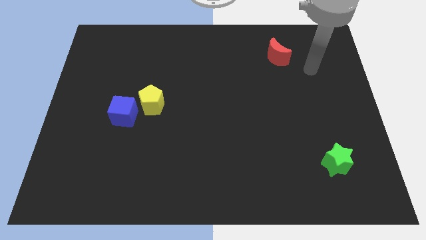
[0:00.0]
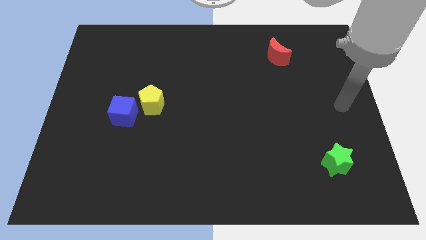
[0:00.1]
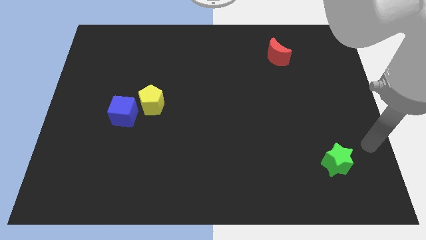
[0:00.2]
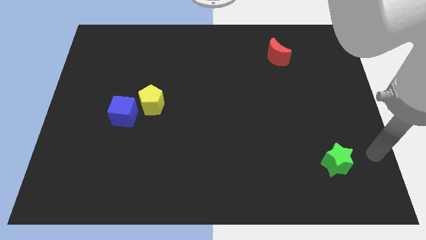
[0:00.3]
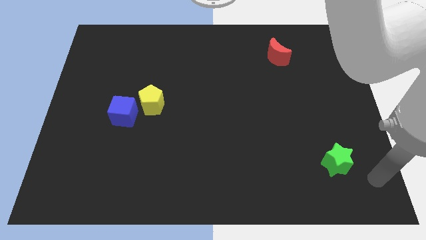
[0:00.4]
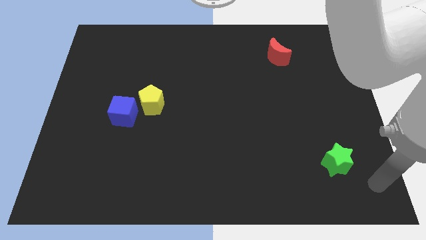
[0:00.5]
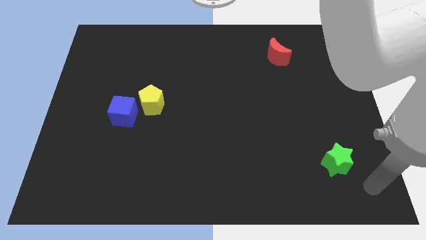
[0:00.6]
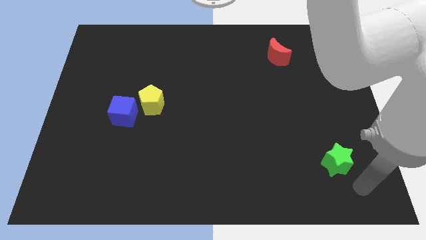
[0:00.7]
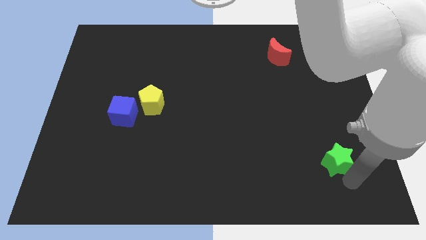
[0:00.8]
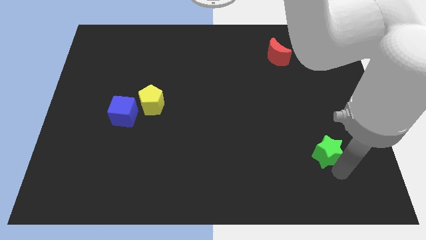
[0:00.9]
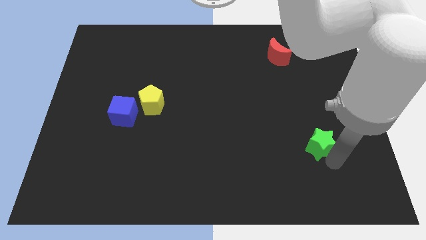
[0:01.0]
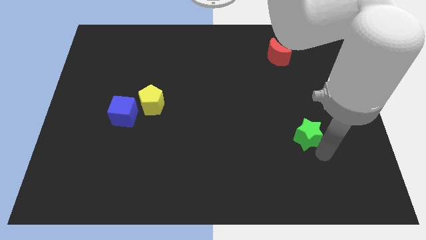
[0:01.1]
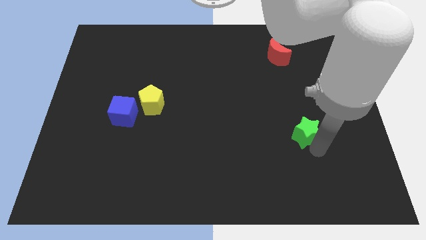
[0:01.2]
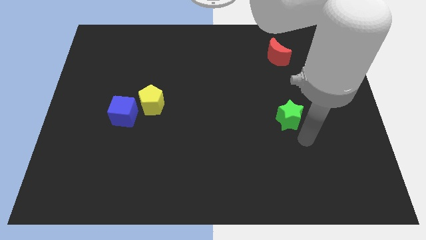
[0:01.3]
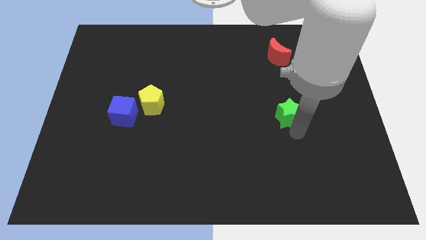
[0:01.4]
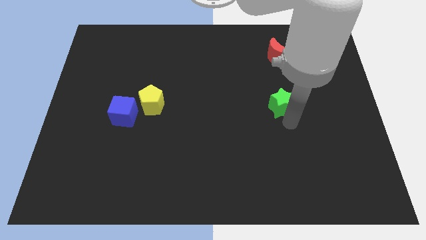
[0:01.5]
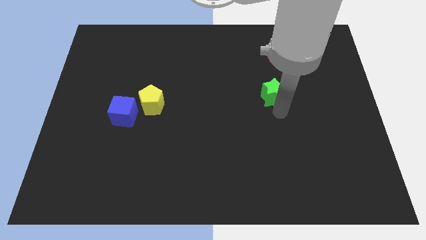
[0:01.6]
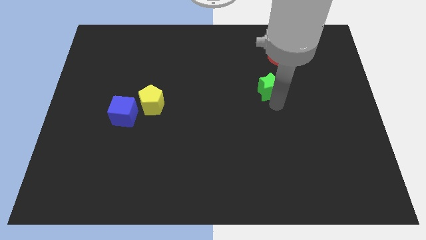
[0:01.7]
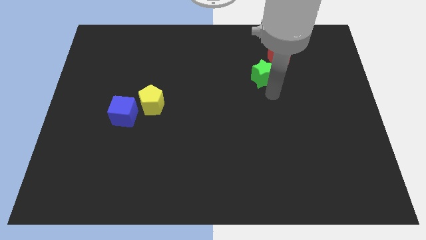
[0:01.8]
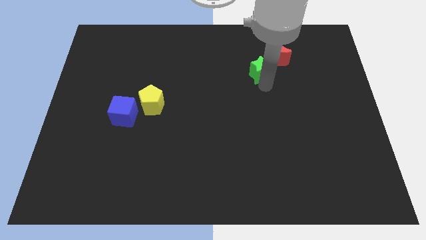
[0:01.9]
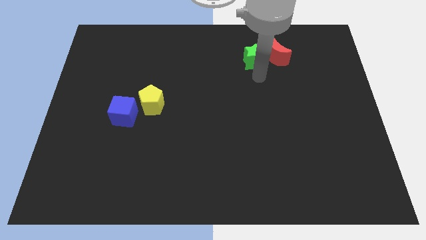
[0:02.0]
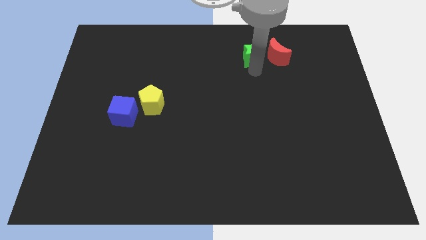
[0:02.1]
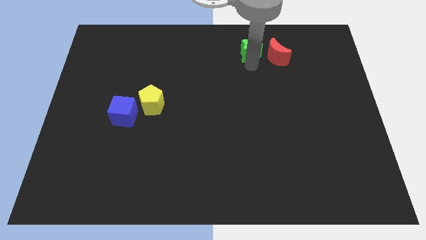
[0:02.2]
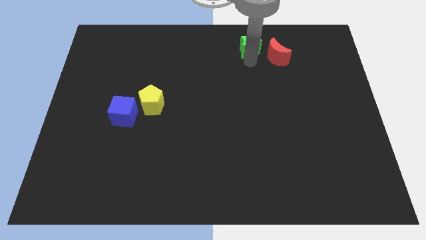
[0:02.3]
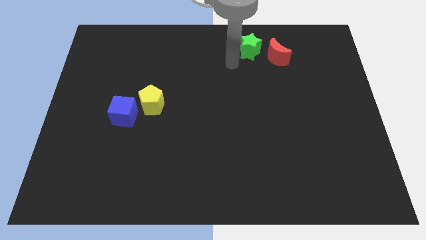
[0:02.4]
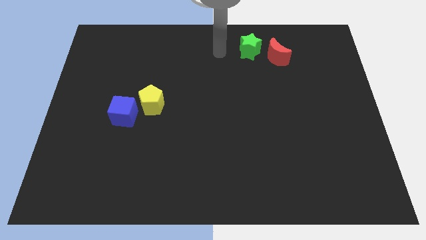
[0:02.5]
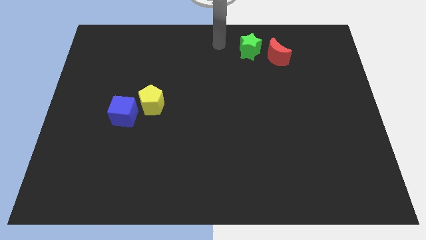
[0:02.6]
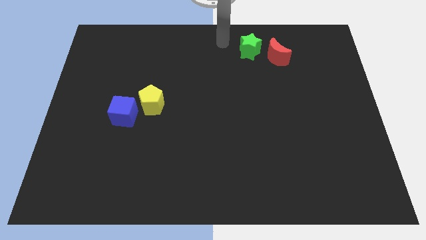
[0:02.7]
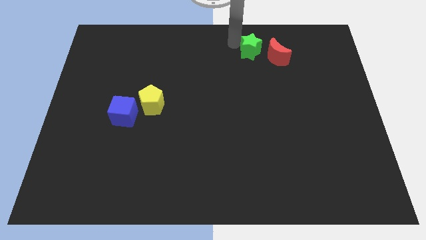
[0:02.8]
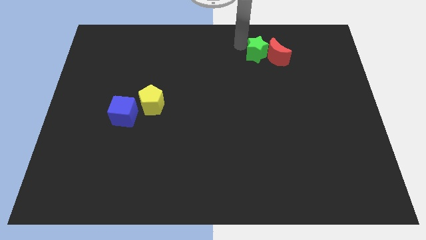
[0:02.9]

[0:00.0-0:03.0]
push the green block next to the red moon

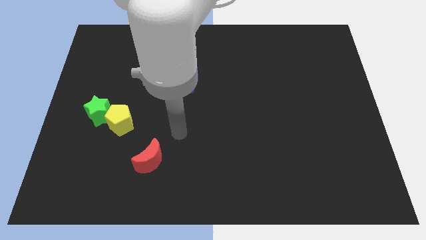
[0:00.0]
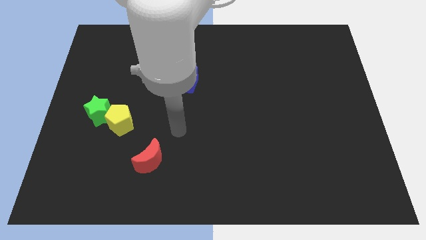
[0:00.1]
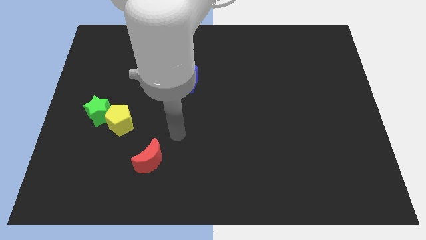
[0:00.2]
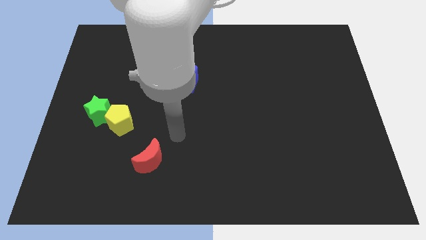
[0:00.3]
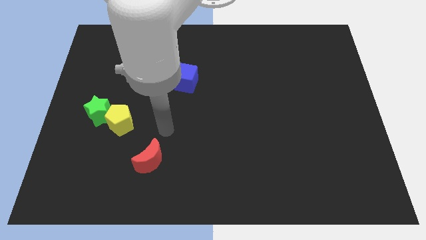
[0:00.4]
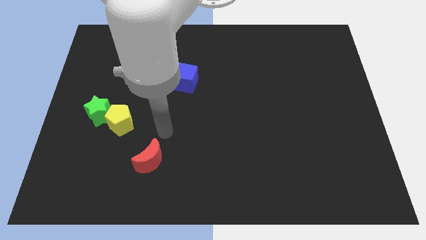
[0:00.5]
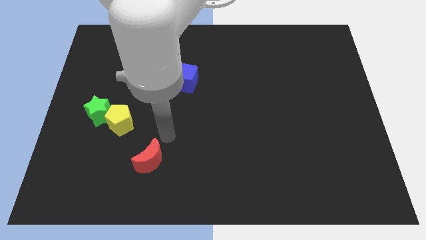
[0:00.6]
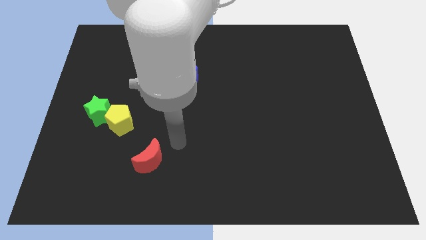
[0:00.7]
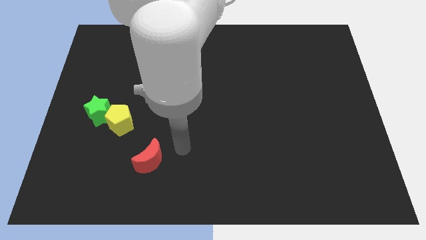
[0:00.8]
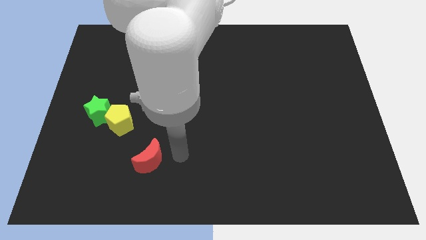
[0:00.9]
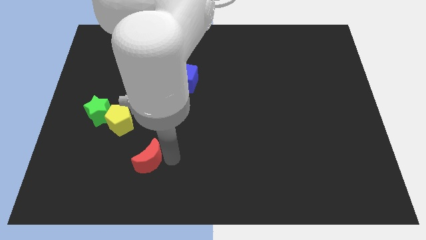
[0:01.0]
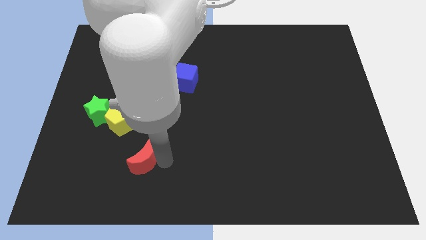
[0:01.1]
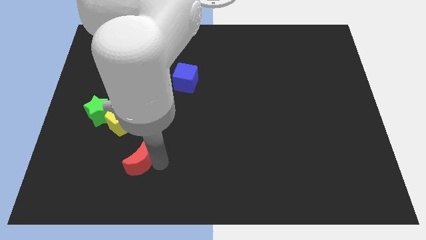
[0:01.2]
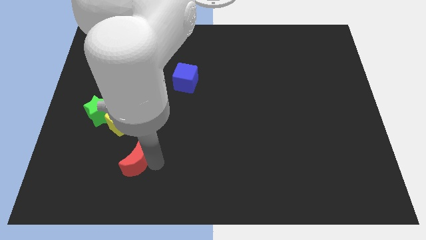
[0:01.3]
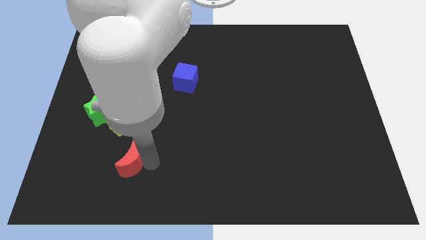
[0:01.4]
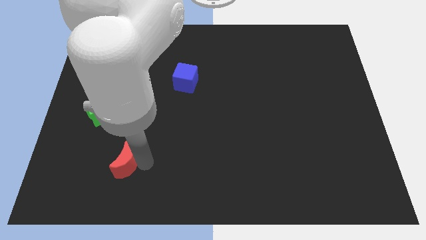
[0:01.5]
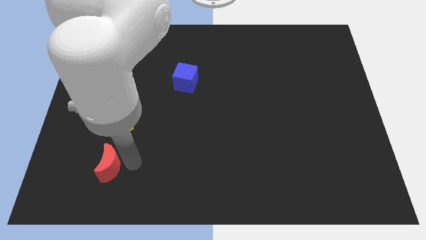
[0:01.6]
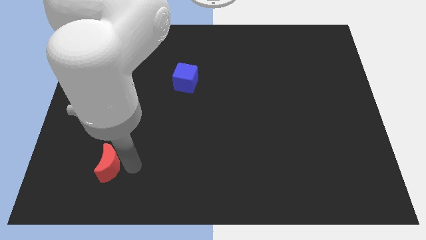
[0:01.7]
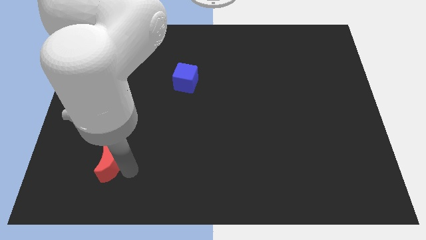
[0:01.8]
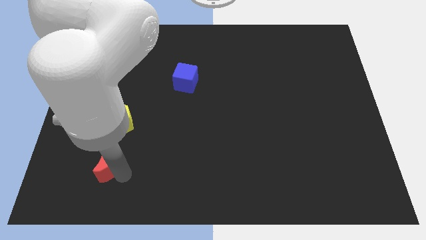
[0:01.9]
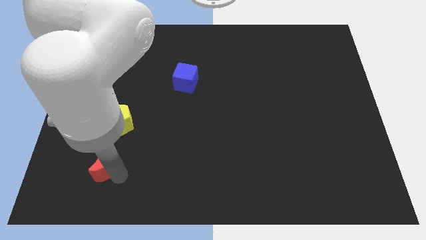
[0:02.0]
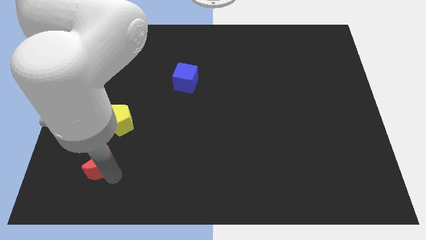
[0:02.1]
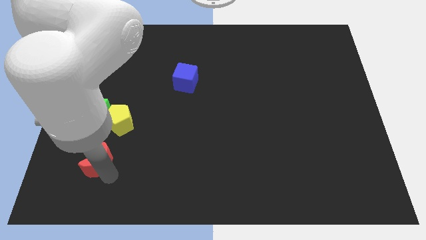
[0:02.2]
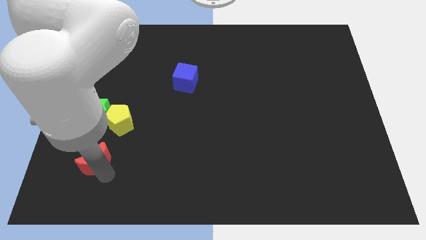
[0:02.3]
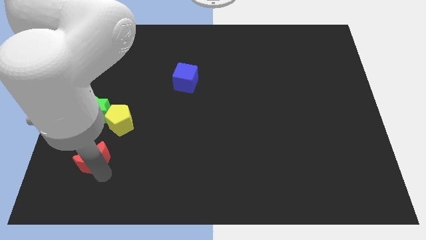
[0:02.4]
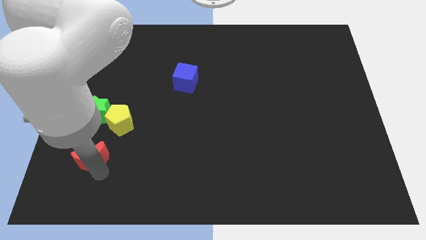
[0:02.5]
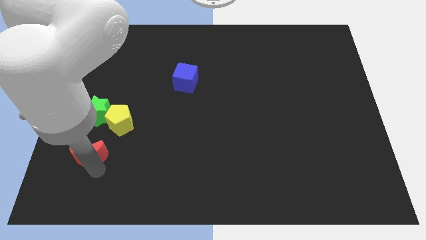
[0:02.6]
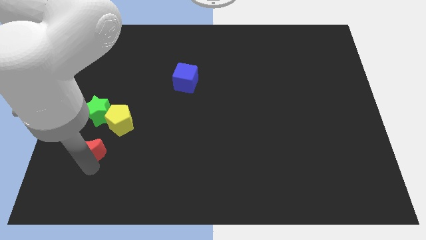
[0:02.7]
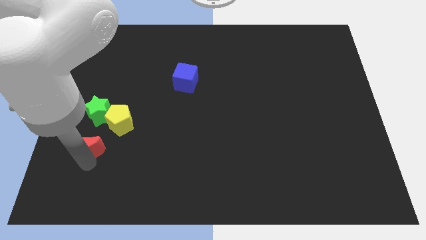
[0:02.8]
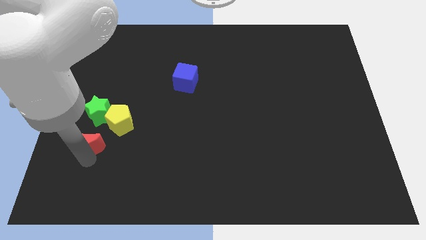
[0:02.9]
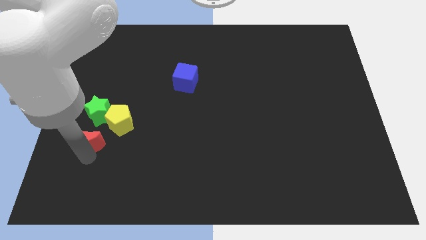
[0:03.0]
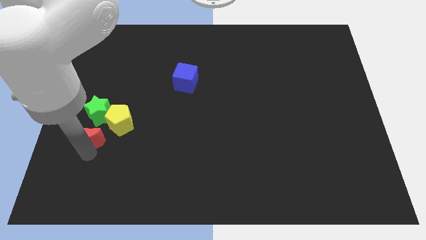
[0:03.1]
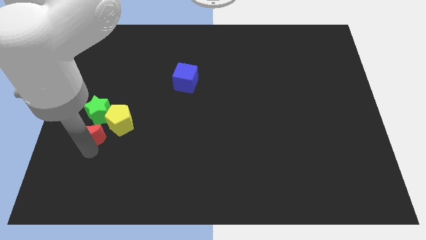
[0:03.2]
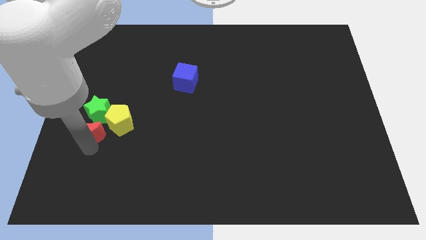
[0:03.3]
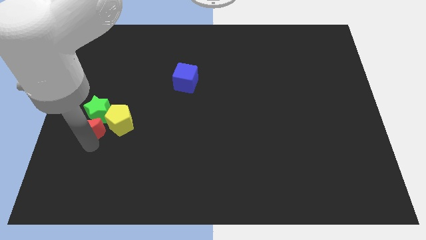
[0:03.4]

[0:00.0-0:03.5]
put the red block towards the star

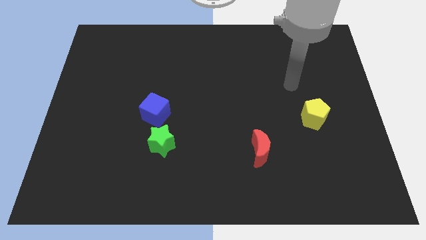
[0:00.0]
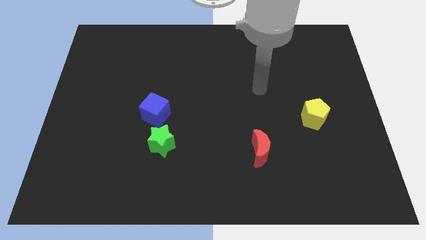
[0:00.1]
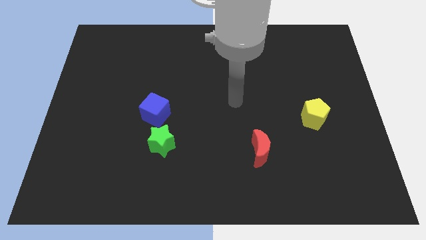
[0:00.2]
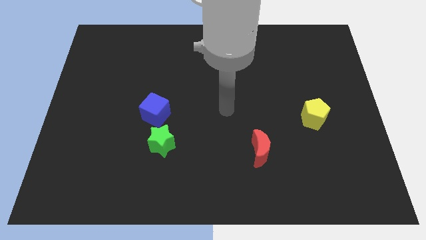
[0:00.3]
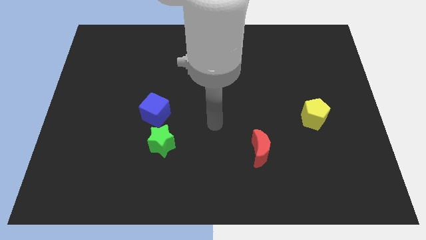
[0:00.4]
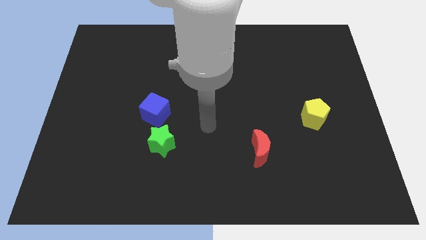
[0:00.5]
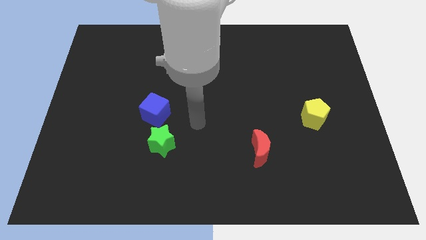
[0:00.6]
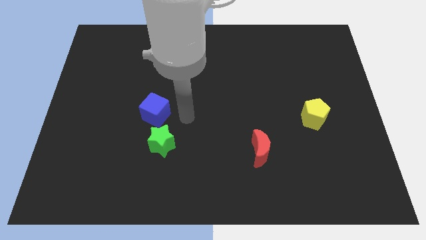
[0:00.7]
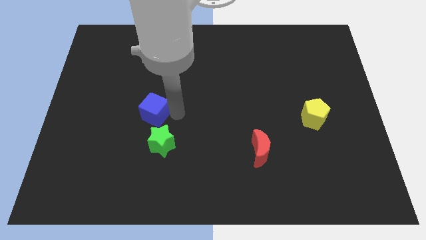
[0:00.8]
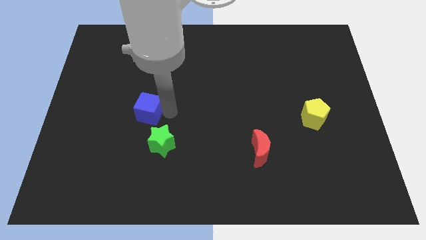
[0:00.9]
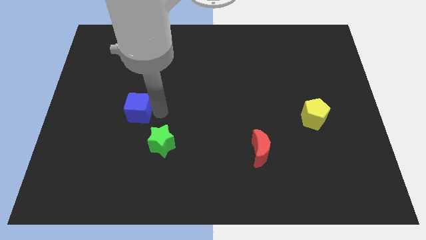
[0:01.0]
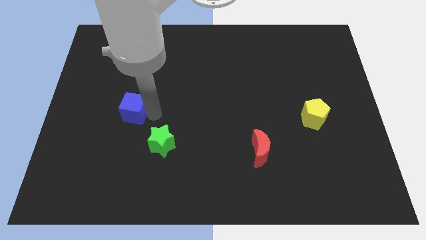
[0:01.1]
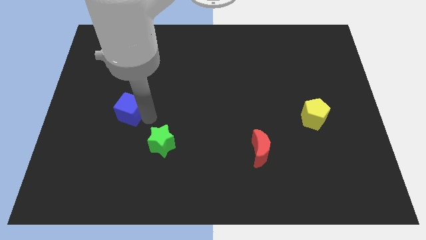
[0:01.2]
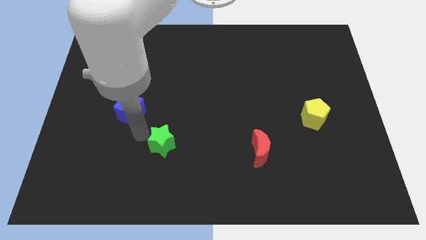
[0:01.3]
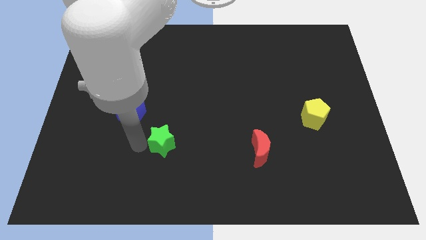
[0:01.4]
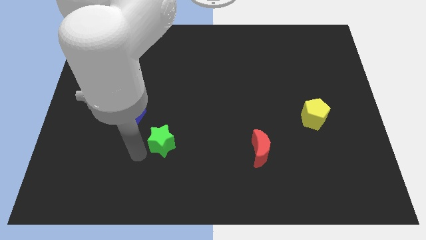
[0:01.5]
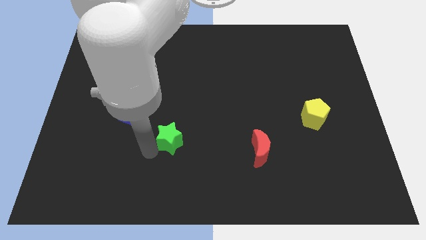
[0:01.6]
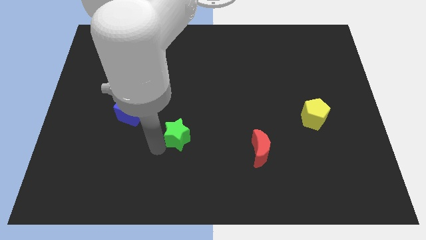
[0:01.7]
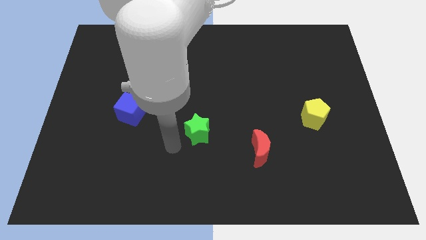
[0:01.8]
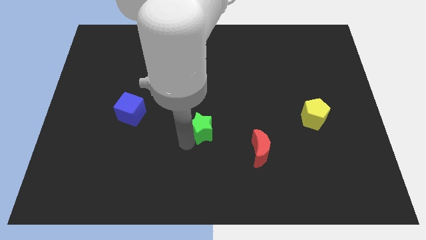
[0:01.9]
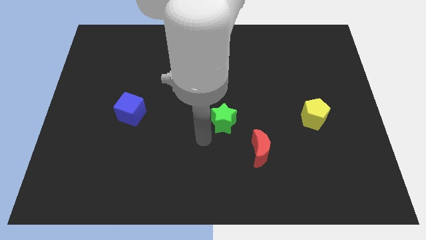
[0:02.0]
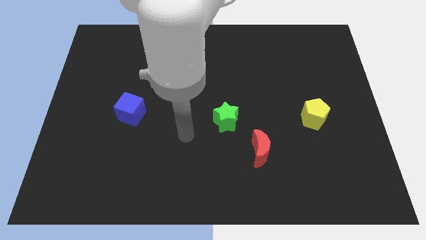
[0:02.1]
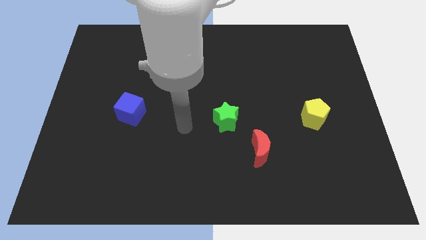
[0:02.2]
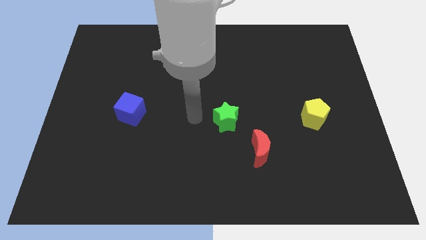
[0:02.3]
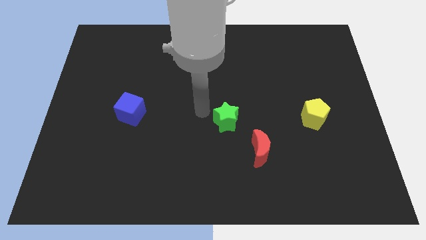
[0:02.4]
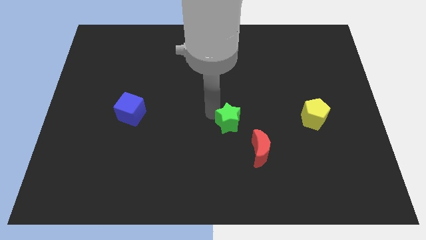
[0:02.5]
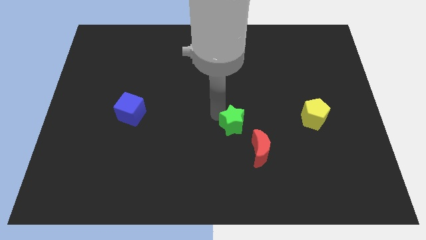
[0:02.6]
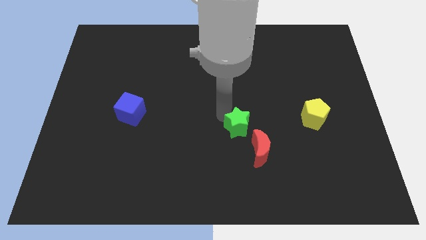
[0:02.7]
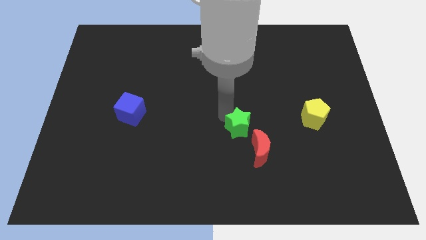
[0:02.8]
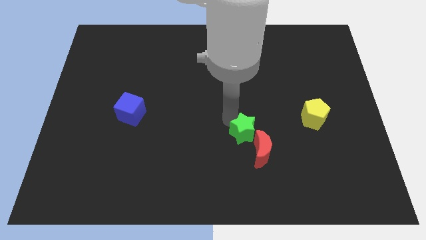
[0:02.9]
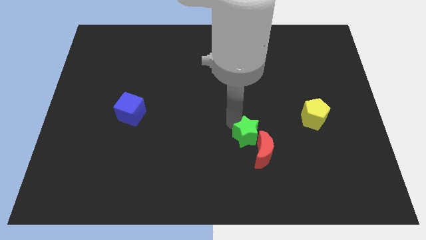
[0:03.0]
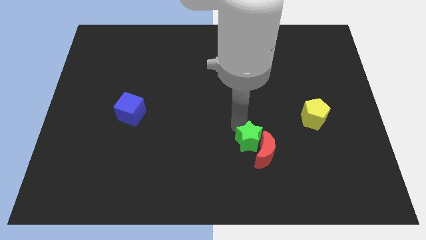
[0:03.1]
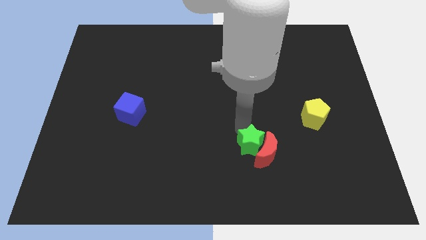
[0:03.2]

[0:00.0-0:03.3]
push the star close to the moon
